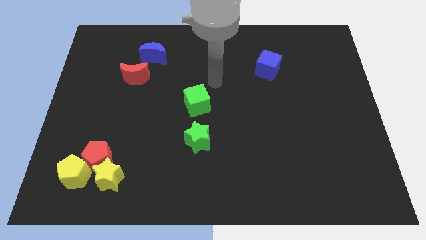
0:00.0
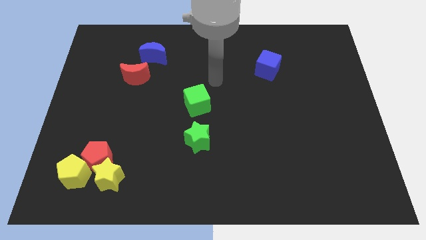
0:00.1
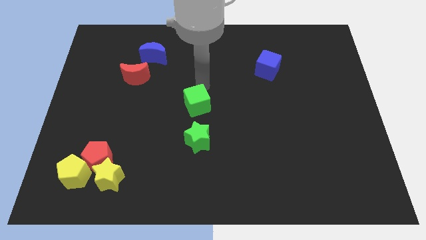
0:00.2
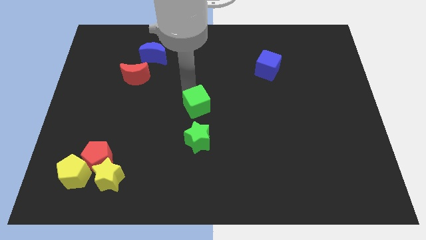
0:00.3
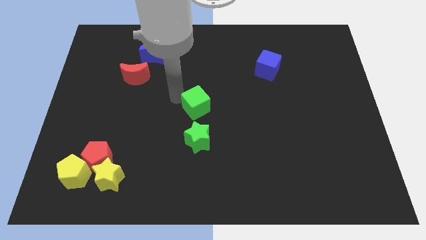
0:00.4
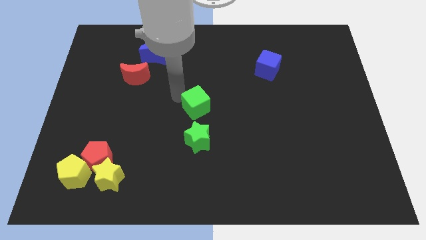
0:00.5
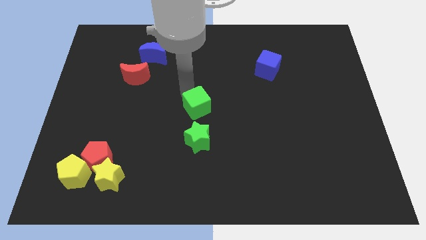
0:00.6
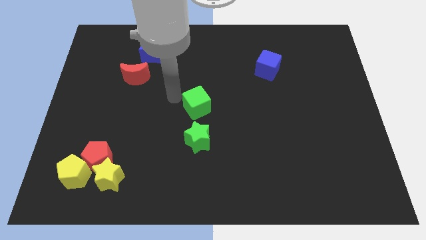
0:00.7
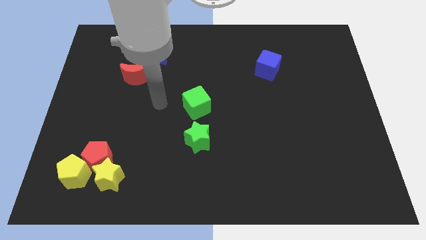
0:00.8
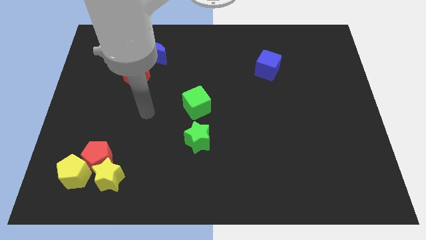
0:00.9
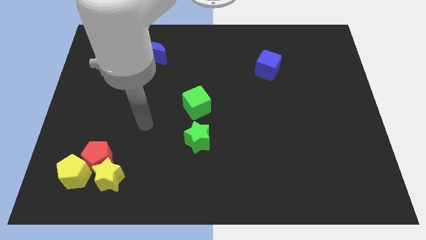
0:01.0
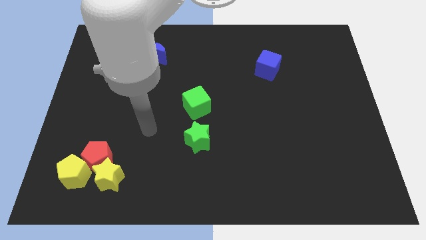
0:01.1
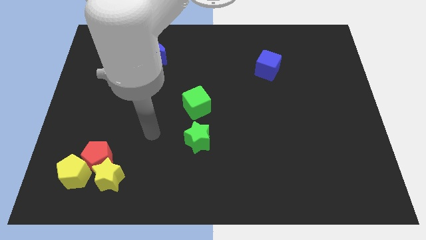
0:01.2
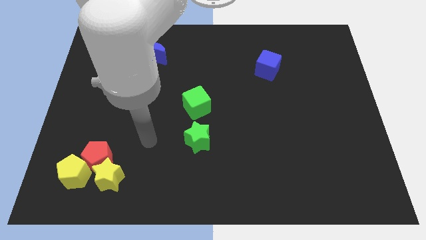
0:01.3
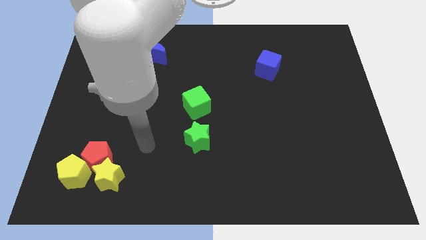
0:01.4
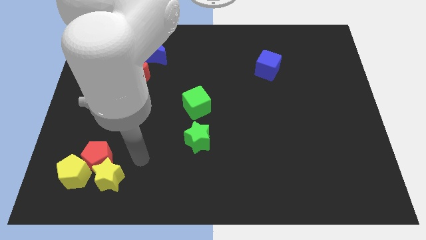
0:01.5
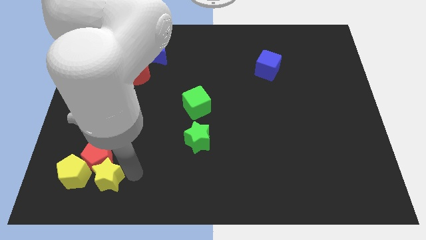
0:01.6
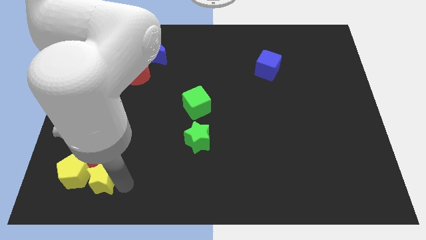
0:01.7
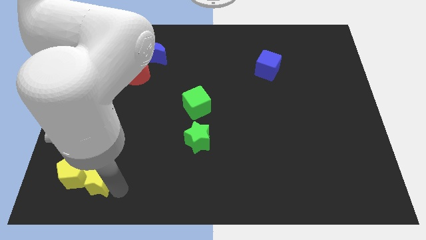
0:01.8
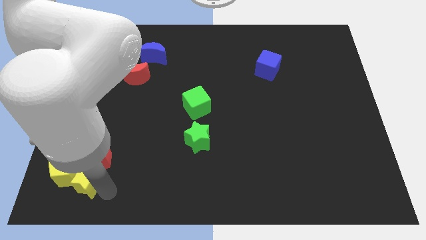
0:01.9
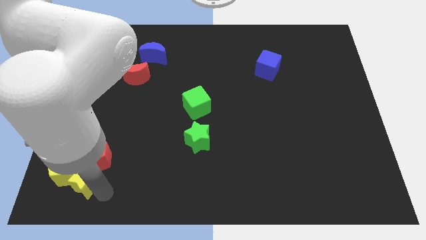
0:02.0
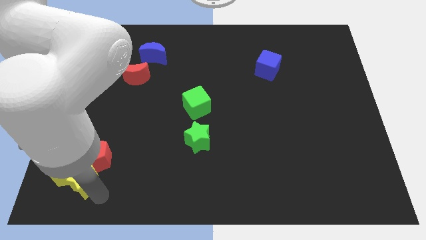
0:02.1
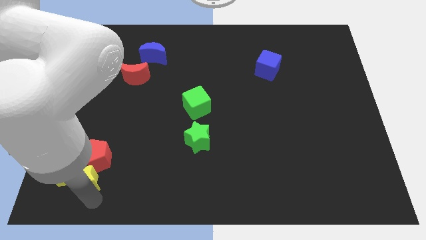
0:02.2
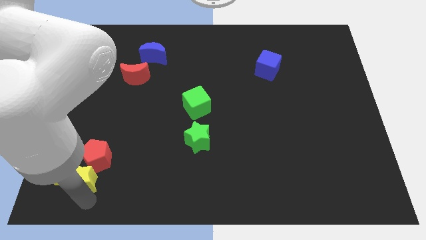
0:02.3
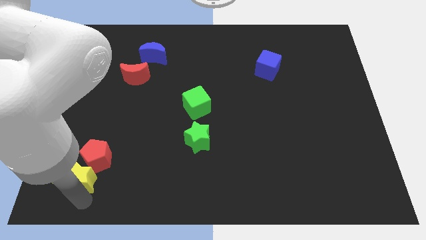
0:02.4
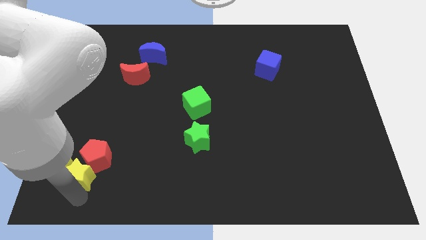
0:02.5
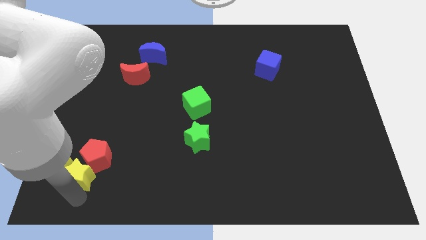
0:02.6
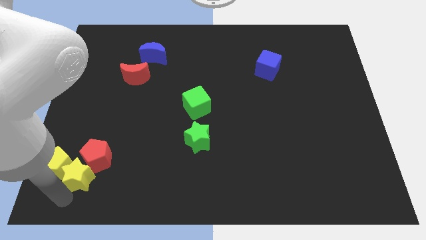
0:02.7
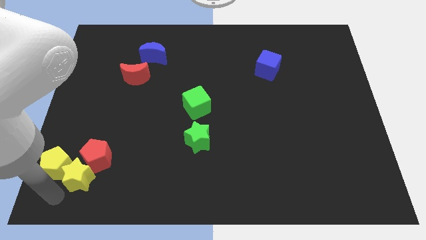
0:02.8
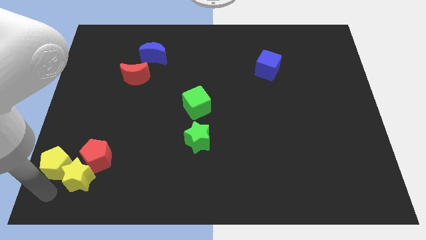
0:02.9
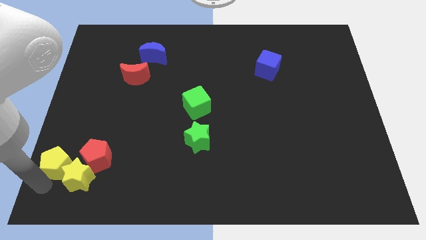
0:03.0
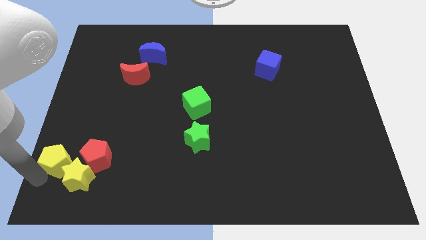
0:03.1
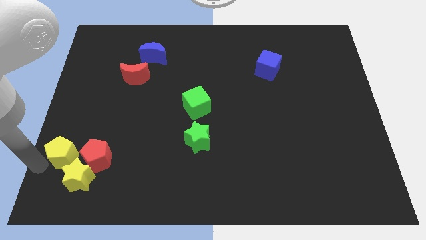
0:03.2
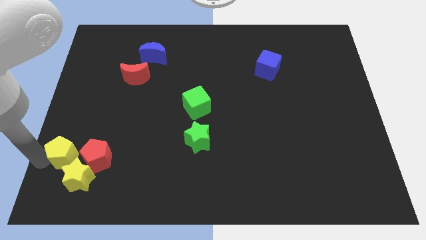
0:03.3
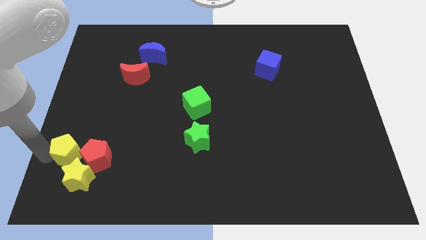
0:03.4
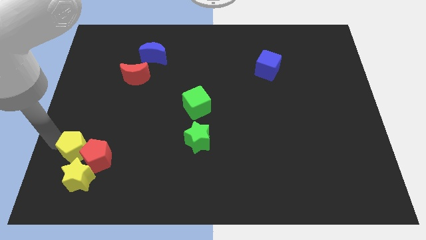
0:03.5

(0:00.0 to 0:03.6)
place the yellow pentagon above the yellow star

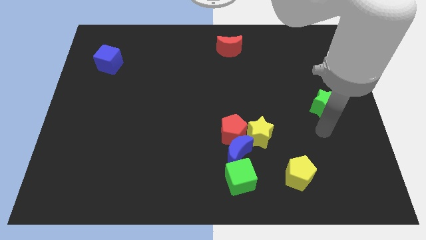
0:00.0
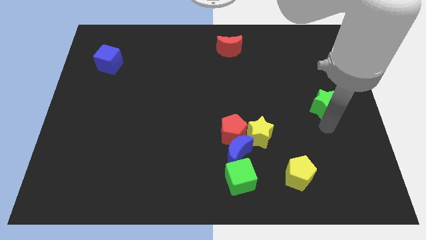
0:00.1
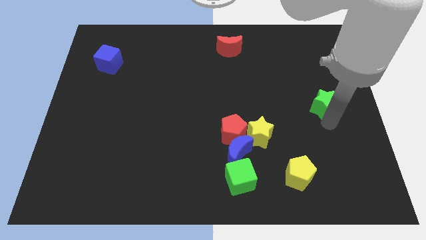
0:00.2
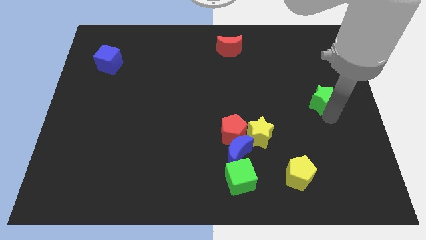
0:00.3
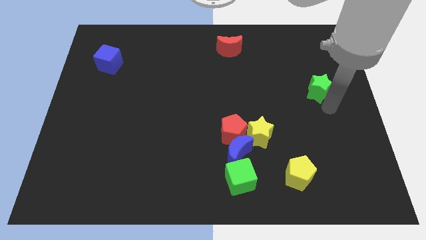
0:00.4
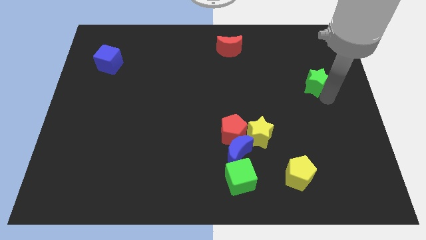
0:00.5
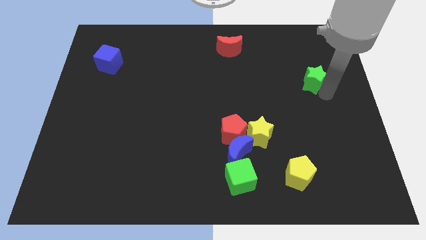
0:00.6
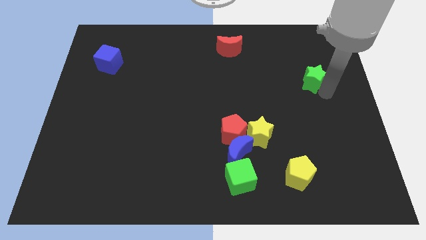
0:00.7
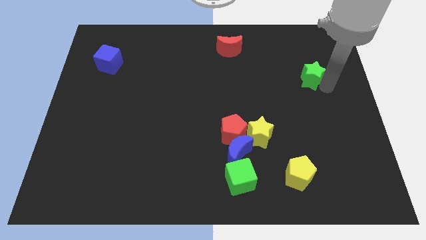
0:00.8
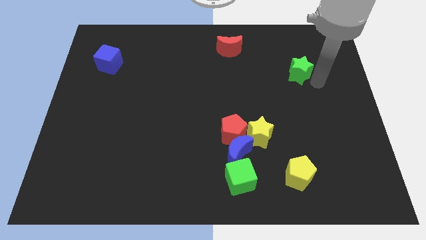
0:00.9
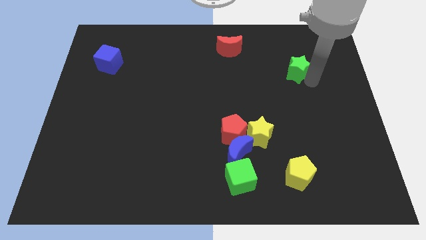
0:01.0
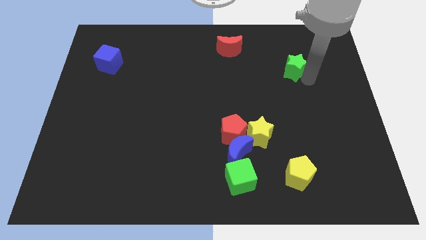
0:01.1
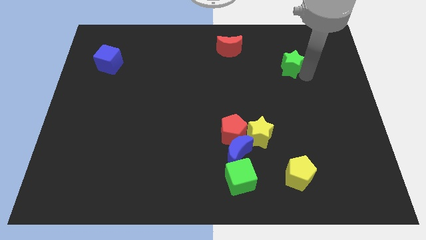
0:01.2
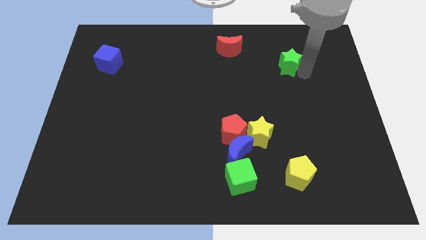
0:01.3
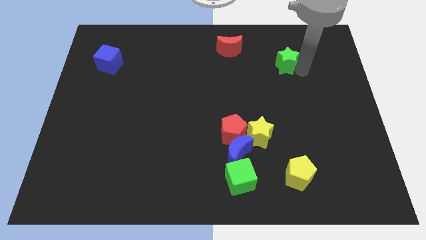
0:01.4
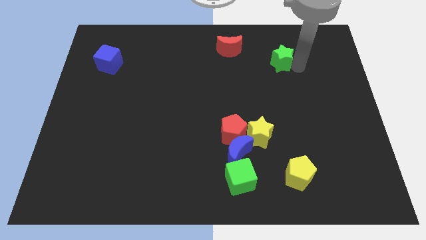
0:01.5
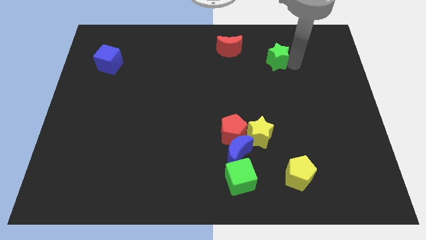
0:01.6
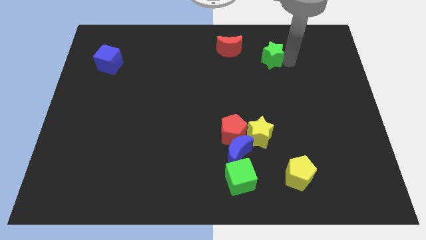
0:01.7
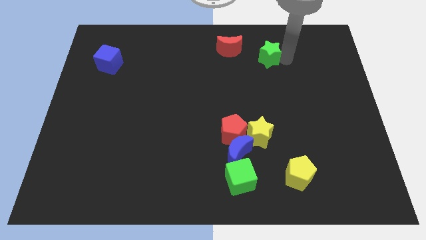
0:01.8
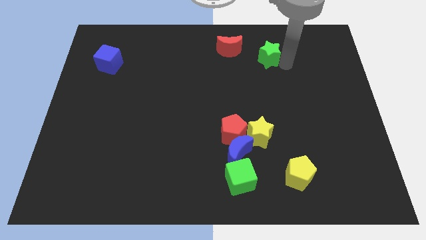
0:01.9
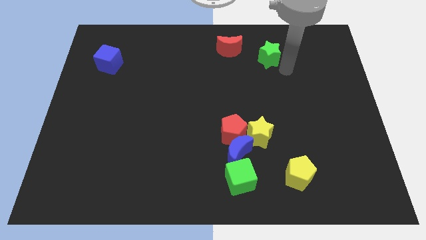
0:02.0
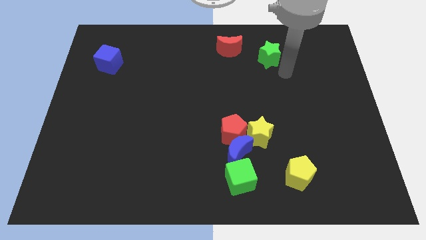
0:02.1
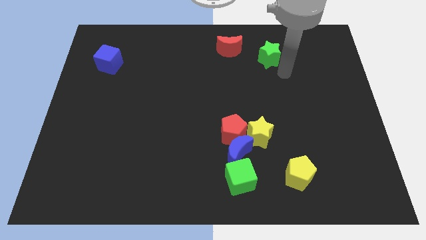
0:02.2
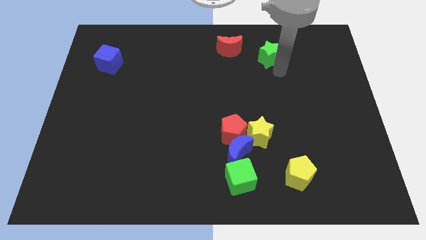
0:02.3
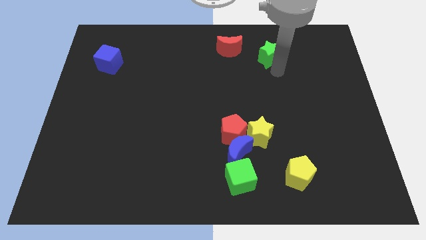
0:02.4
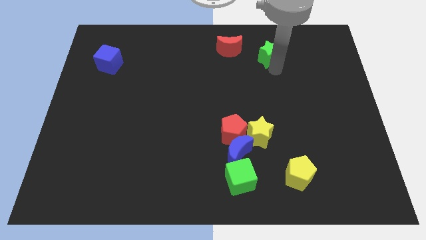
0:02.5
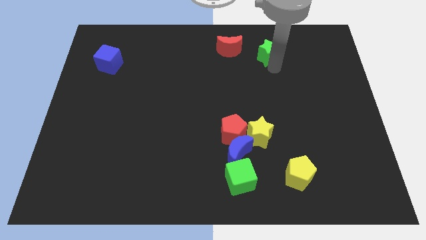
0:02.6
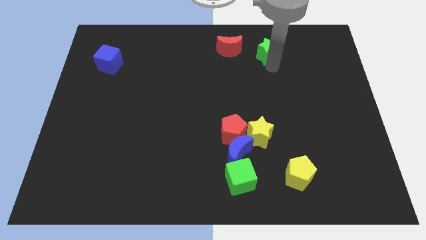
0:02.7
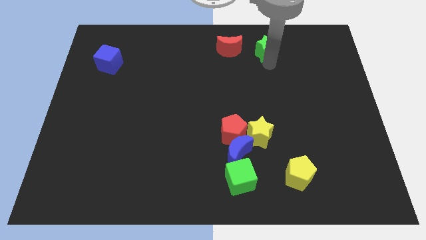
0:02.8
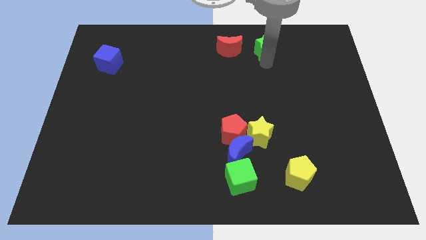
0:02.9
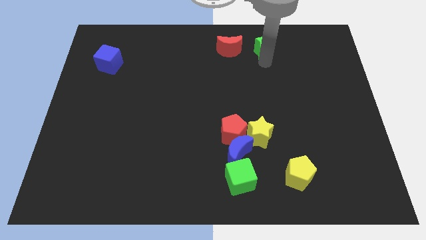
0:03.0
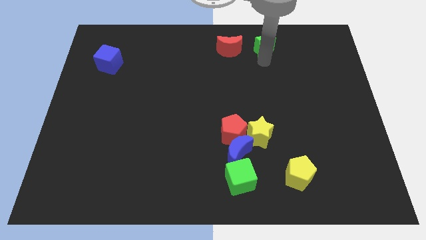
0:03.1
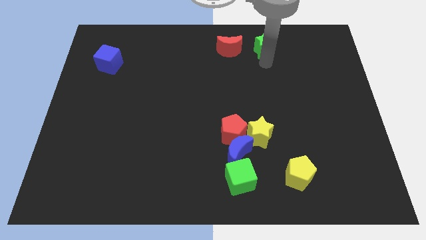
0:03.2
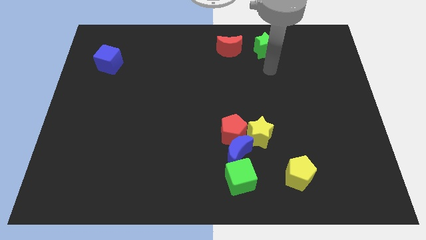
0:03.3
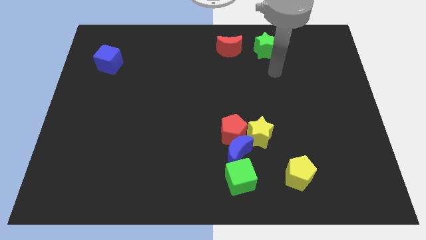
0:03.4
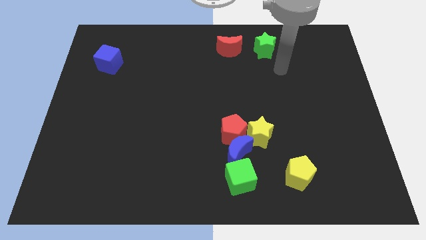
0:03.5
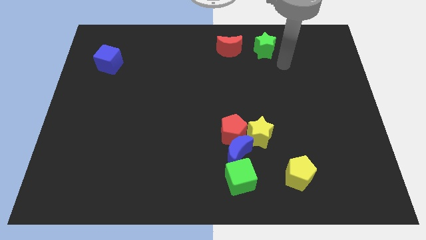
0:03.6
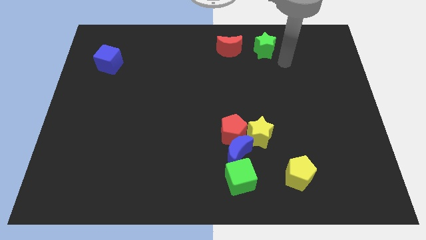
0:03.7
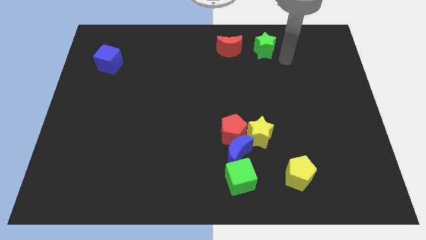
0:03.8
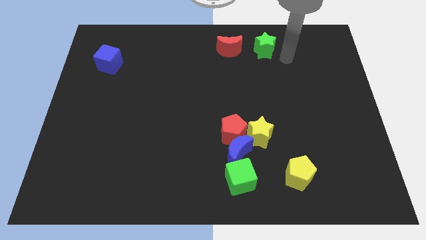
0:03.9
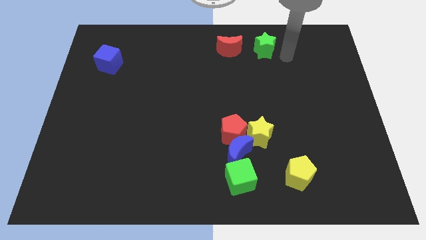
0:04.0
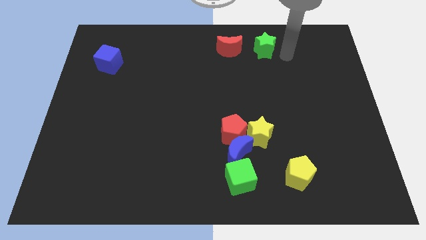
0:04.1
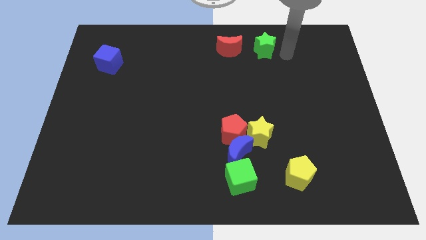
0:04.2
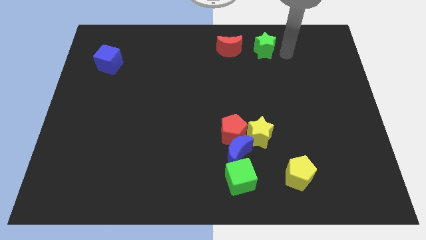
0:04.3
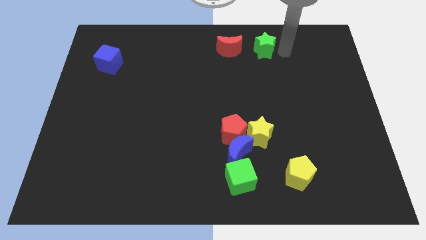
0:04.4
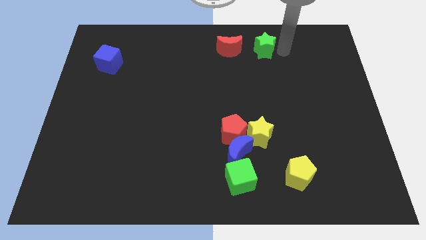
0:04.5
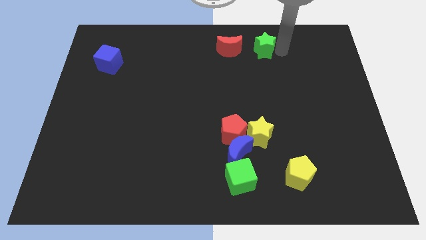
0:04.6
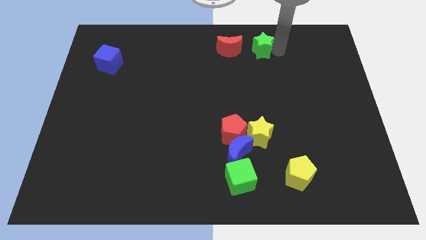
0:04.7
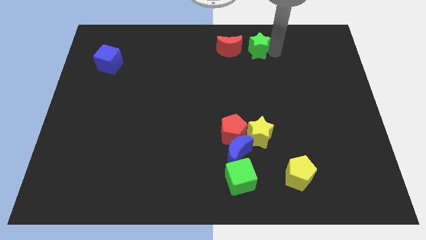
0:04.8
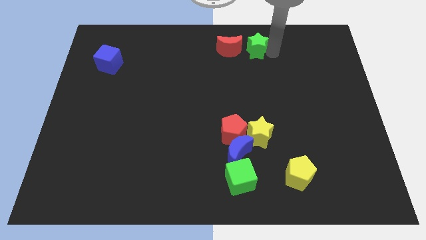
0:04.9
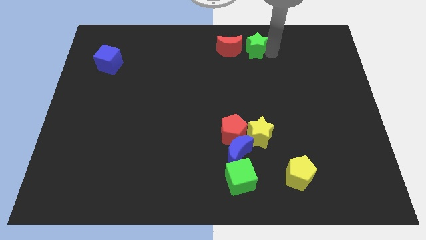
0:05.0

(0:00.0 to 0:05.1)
move green star into red moon

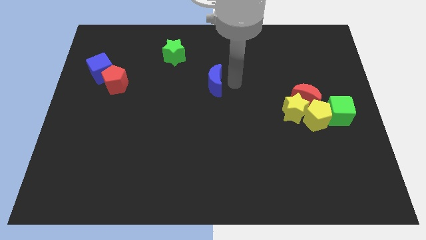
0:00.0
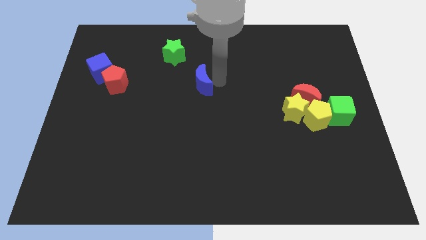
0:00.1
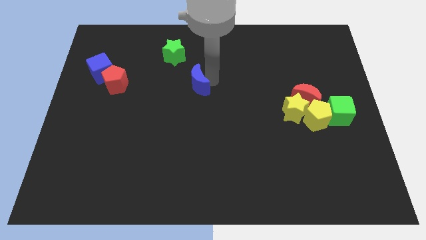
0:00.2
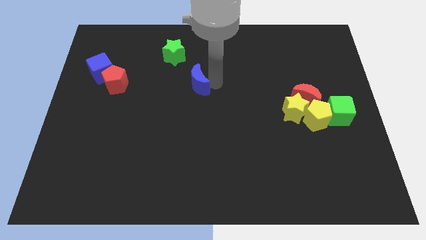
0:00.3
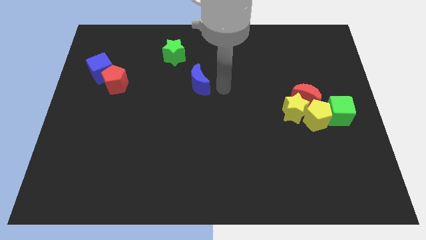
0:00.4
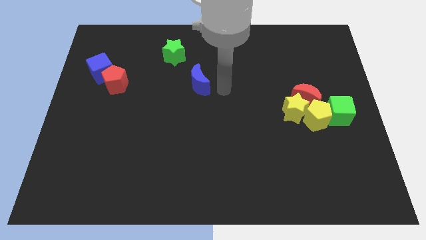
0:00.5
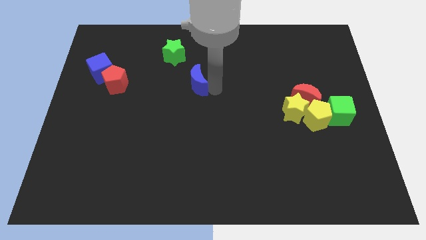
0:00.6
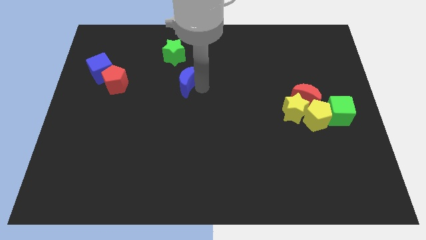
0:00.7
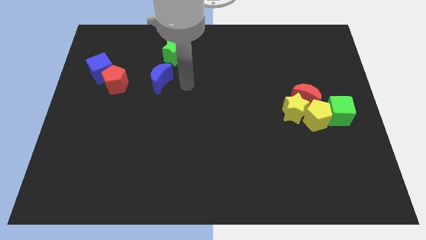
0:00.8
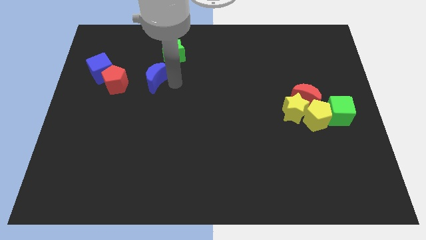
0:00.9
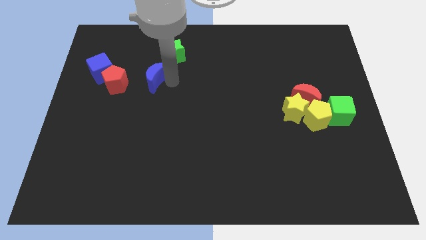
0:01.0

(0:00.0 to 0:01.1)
move blue moon towards red pentagon
